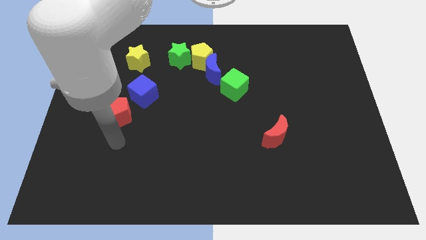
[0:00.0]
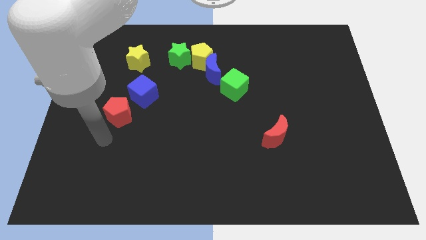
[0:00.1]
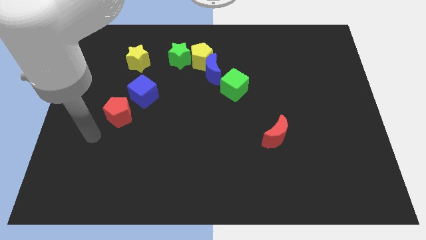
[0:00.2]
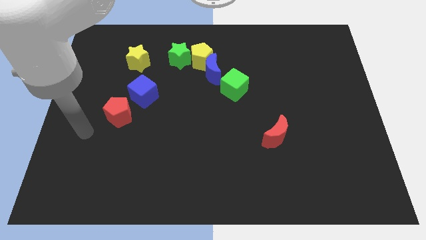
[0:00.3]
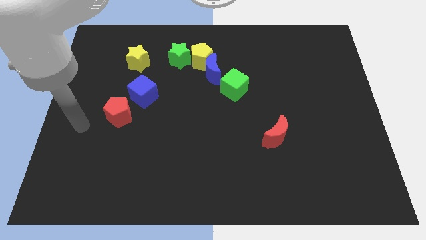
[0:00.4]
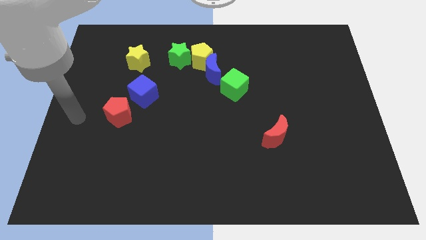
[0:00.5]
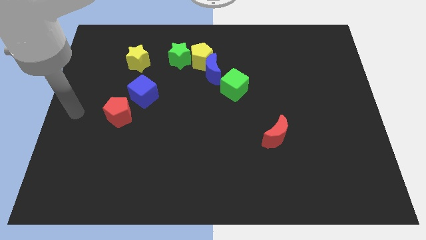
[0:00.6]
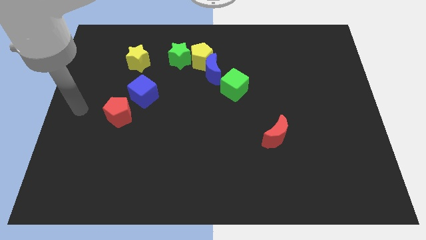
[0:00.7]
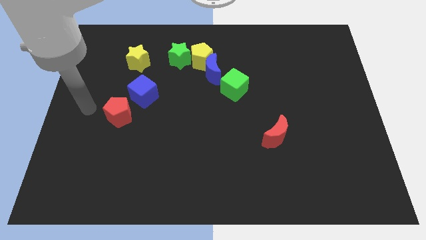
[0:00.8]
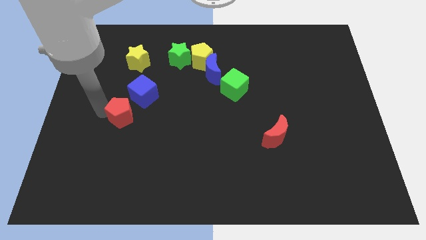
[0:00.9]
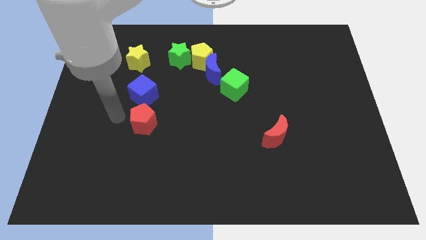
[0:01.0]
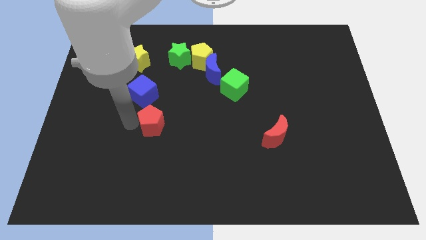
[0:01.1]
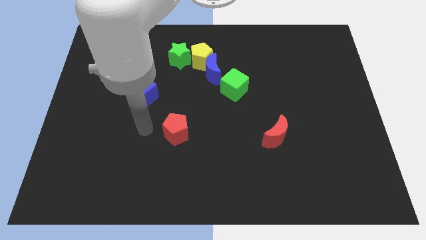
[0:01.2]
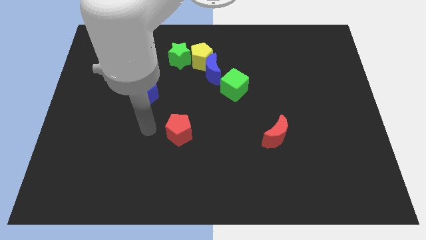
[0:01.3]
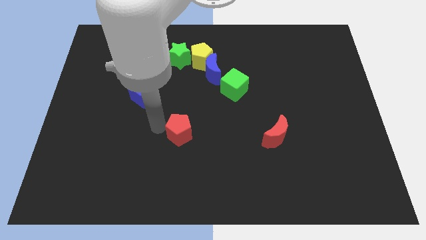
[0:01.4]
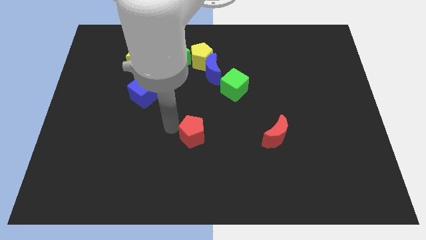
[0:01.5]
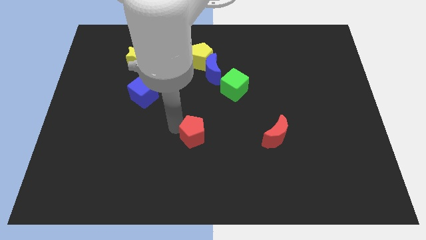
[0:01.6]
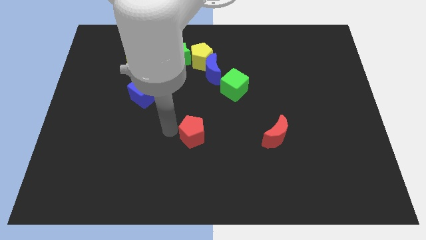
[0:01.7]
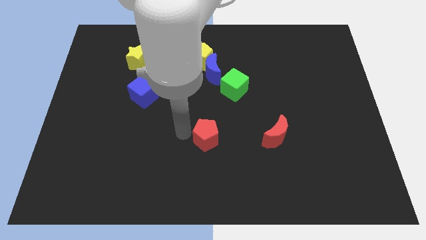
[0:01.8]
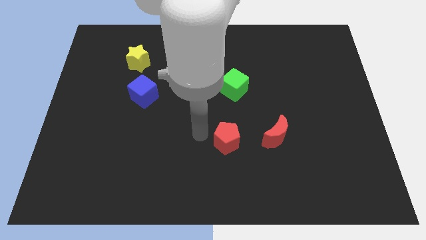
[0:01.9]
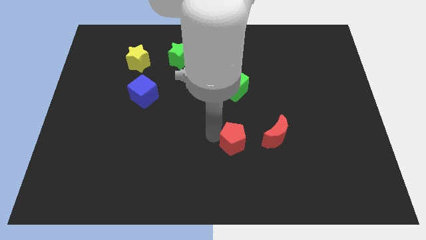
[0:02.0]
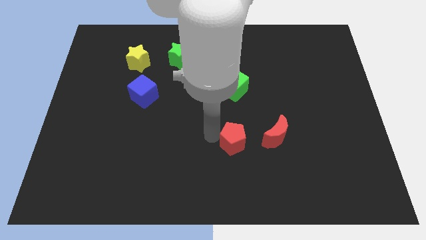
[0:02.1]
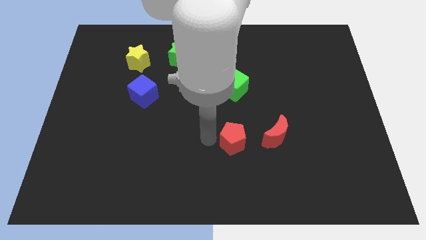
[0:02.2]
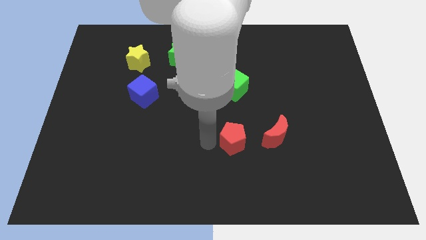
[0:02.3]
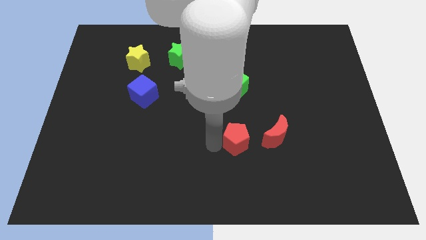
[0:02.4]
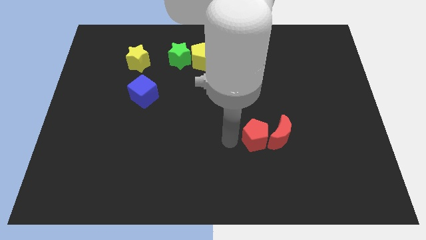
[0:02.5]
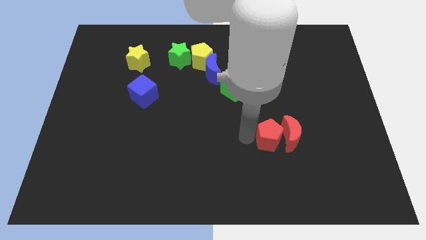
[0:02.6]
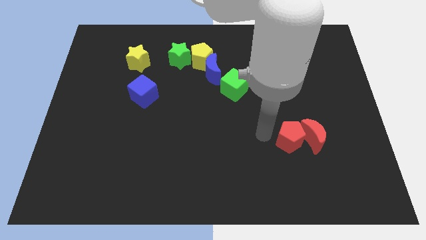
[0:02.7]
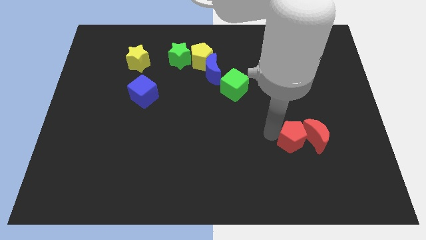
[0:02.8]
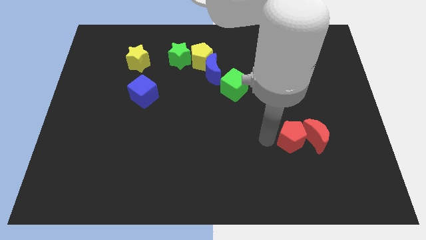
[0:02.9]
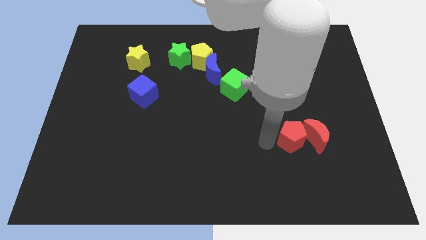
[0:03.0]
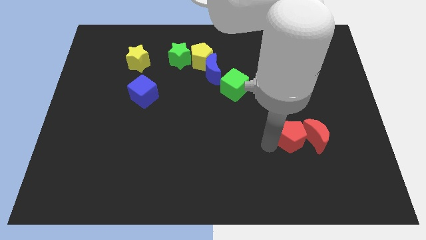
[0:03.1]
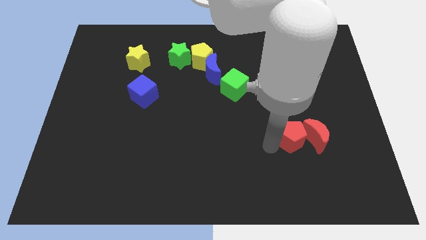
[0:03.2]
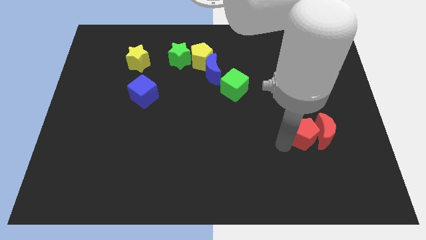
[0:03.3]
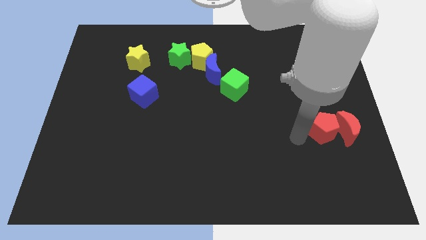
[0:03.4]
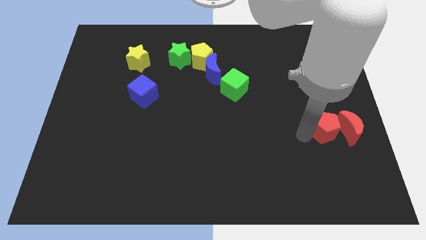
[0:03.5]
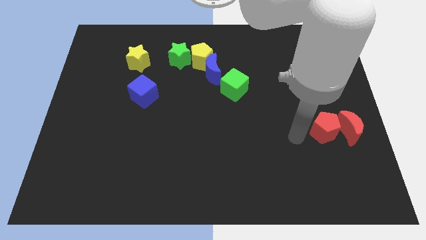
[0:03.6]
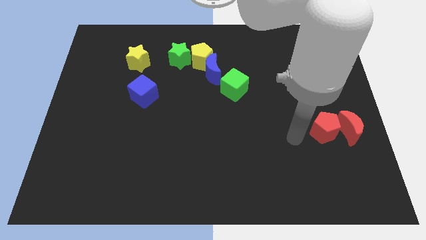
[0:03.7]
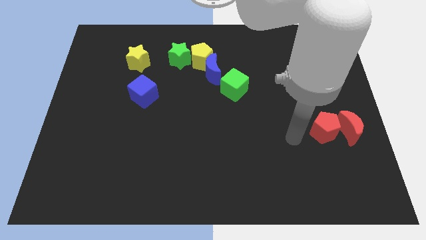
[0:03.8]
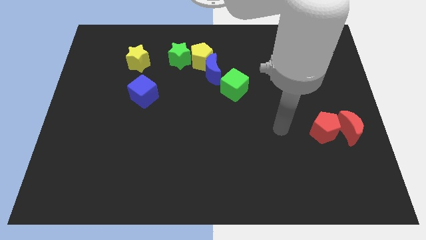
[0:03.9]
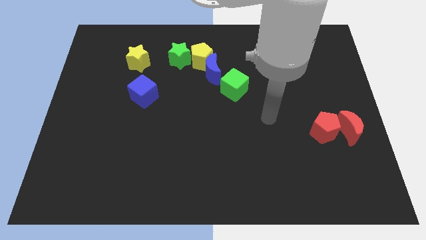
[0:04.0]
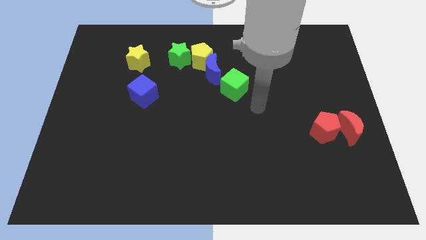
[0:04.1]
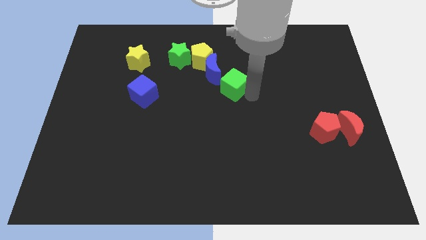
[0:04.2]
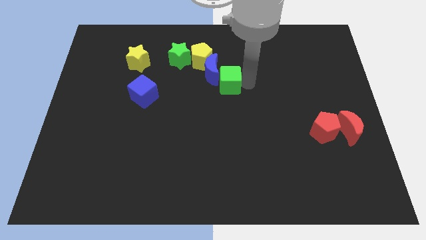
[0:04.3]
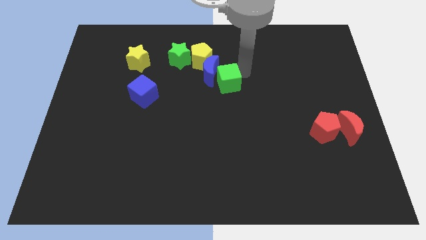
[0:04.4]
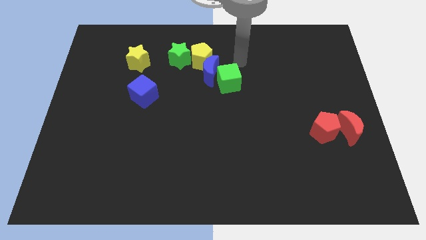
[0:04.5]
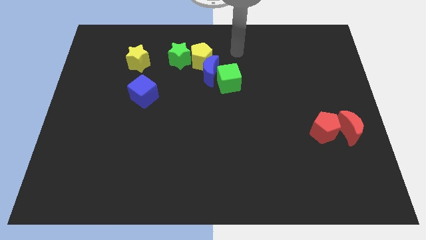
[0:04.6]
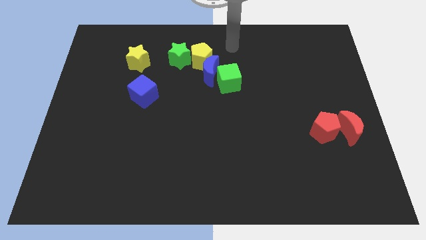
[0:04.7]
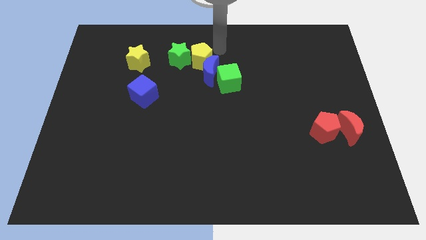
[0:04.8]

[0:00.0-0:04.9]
move red pentagon and red moon to the right center of the board

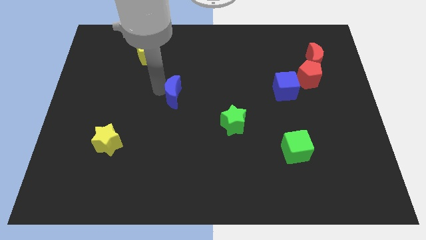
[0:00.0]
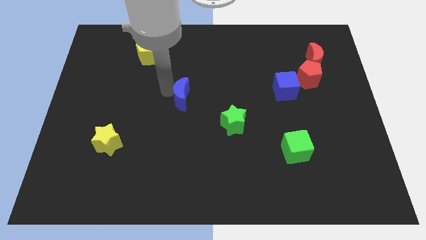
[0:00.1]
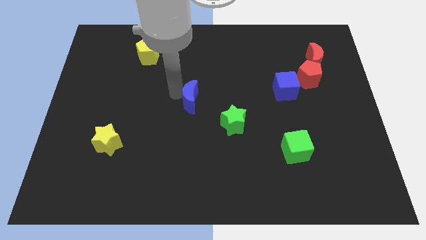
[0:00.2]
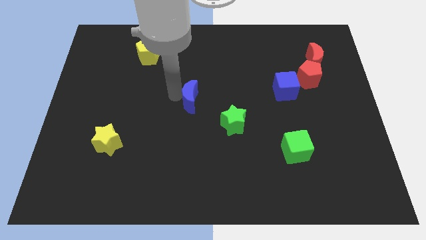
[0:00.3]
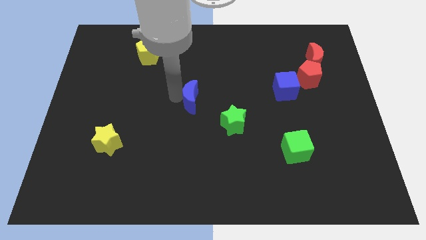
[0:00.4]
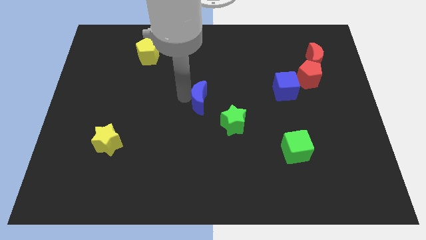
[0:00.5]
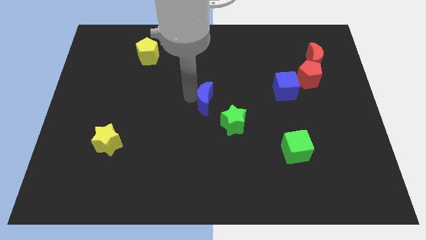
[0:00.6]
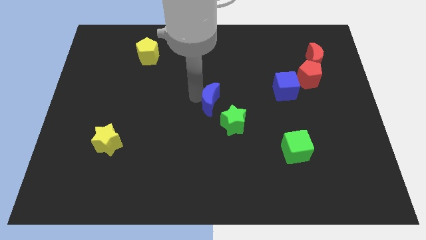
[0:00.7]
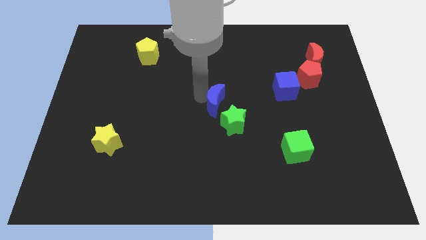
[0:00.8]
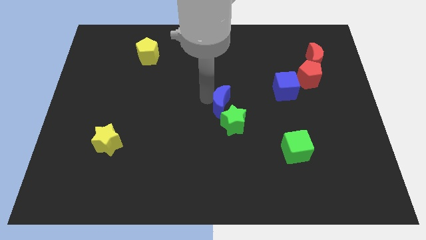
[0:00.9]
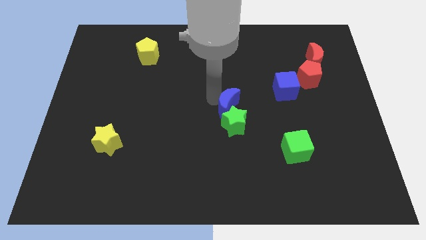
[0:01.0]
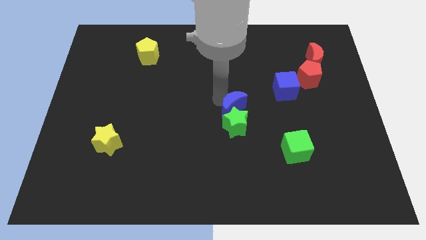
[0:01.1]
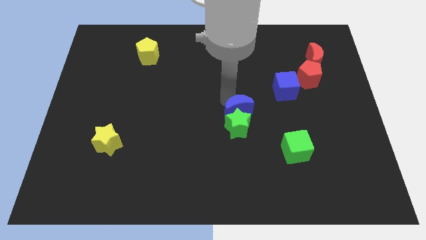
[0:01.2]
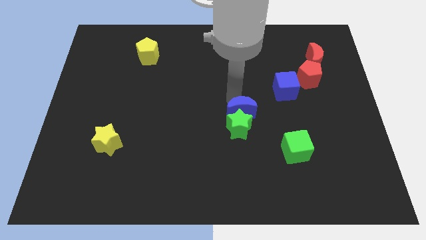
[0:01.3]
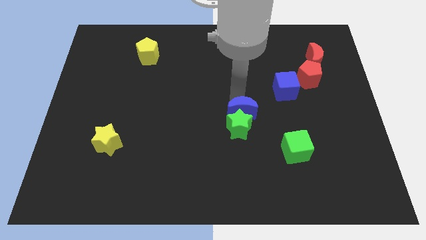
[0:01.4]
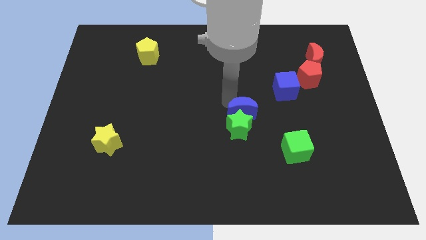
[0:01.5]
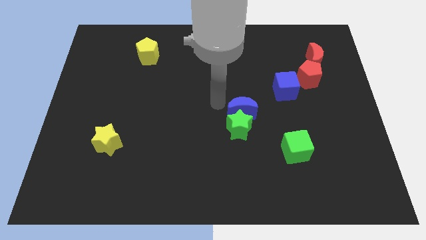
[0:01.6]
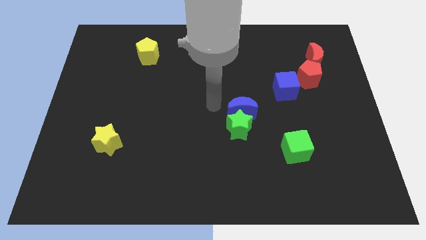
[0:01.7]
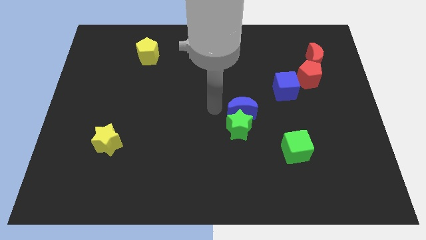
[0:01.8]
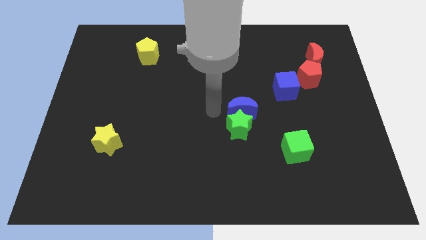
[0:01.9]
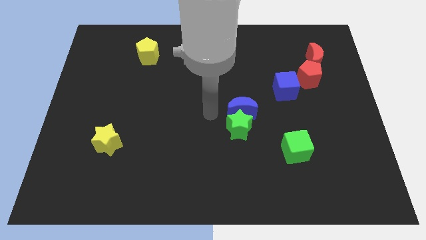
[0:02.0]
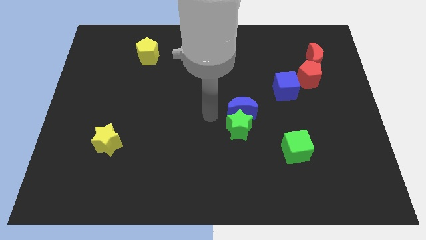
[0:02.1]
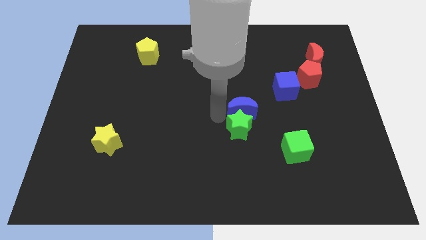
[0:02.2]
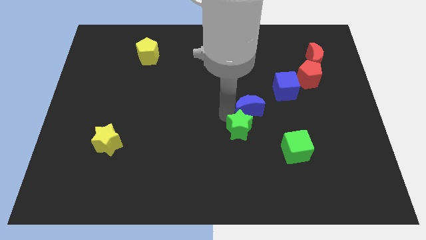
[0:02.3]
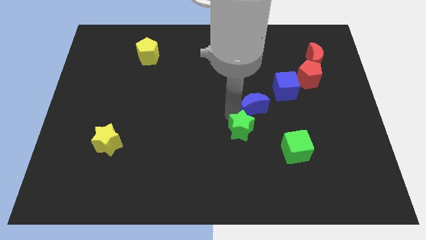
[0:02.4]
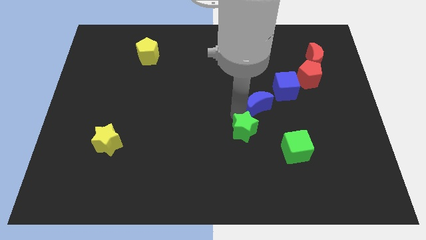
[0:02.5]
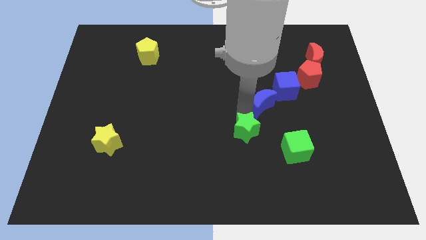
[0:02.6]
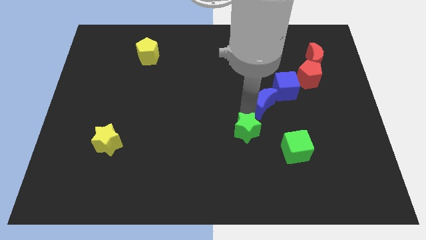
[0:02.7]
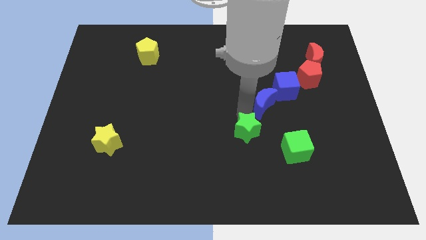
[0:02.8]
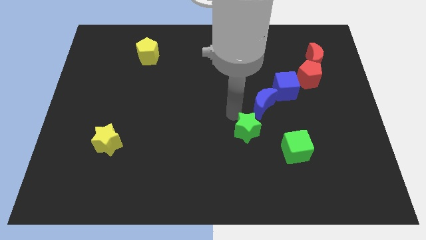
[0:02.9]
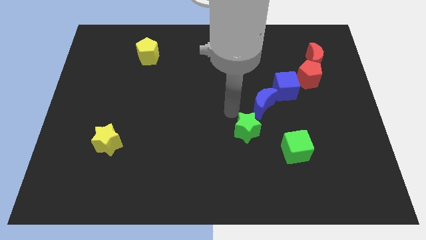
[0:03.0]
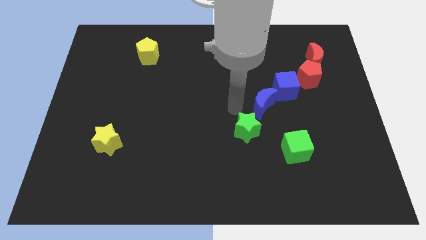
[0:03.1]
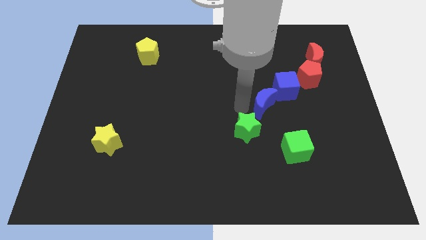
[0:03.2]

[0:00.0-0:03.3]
push the blue moon in between the blue cube and the green star diagonally

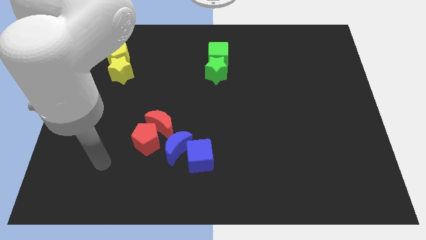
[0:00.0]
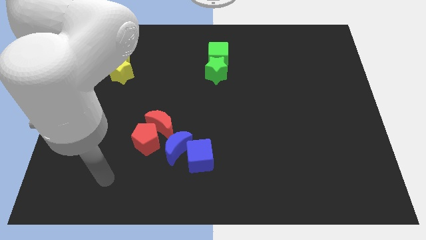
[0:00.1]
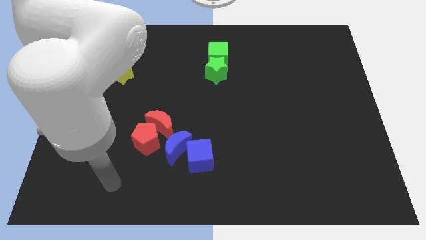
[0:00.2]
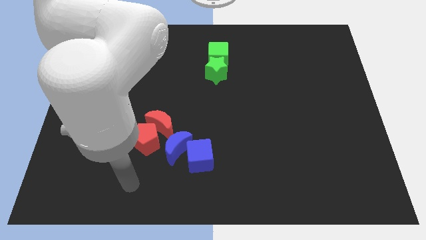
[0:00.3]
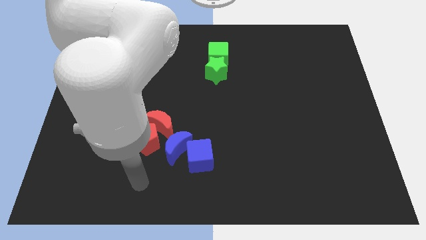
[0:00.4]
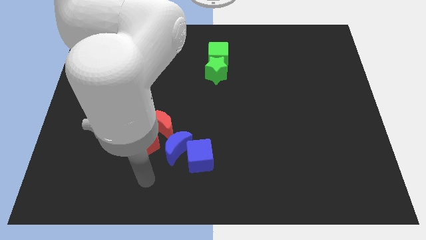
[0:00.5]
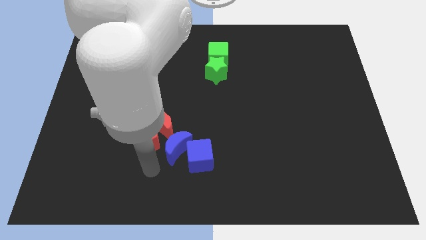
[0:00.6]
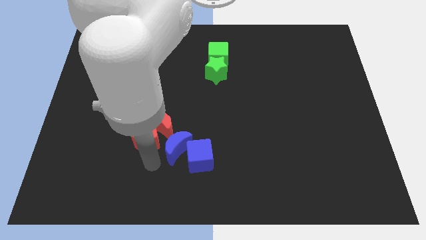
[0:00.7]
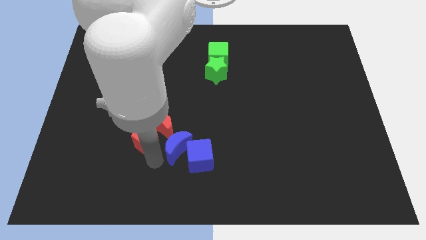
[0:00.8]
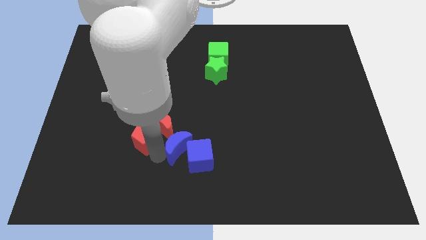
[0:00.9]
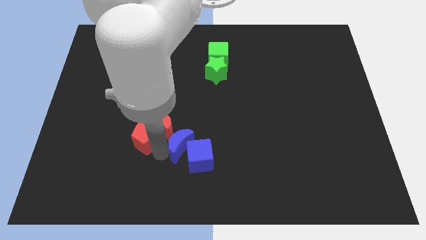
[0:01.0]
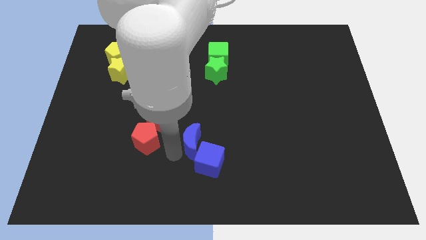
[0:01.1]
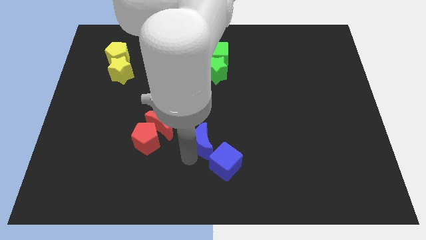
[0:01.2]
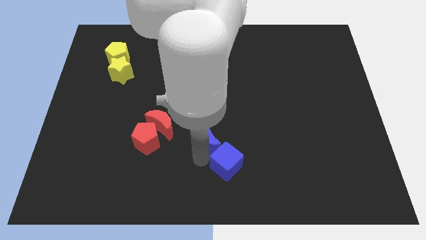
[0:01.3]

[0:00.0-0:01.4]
push the blue crescent into the blue cube
